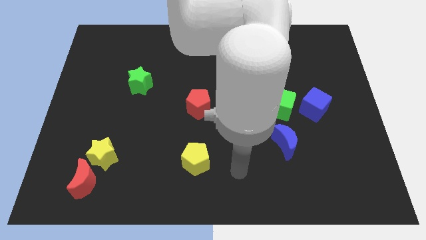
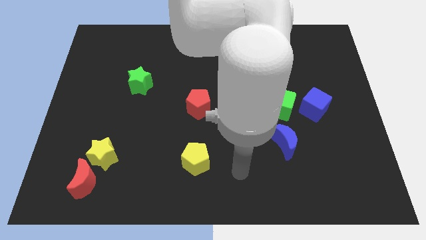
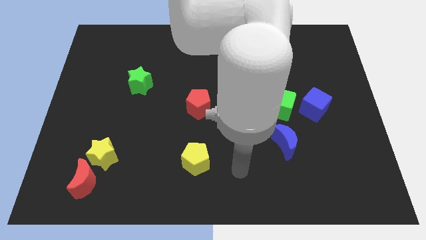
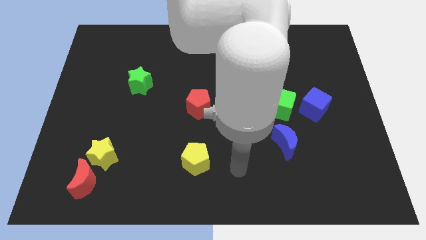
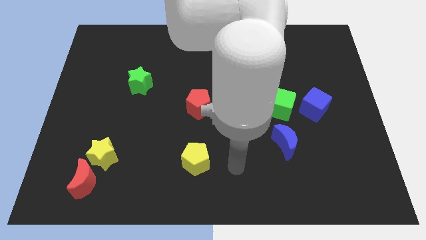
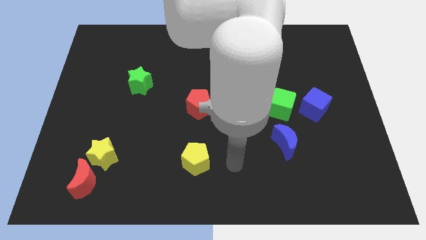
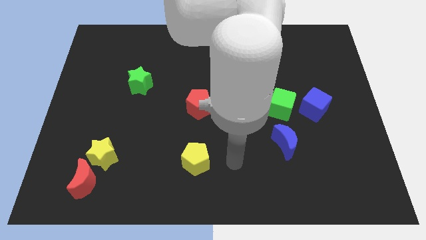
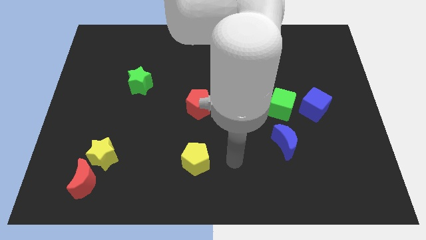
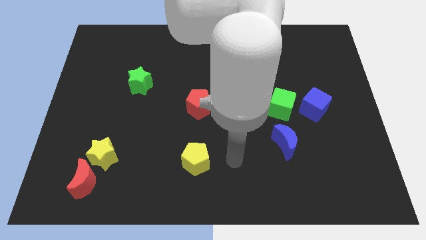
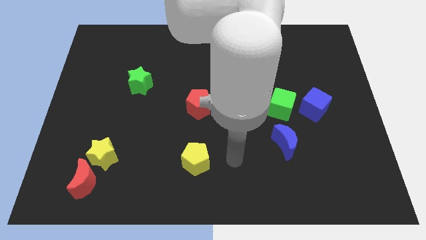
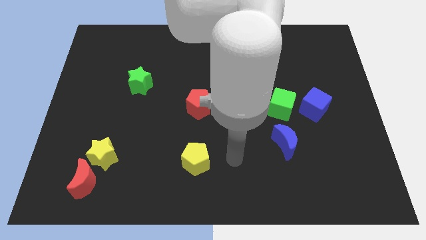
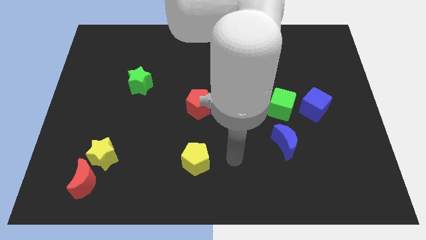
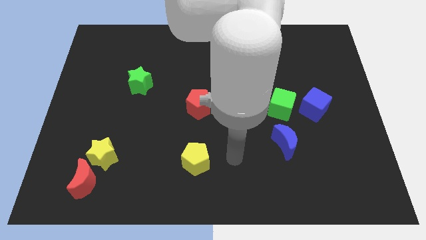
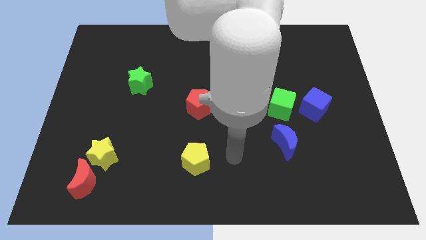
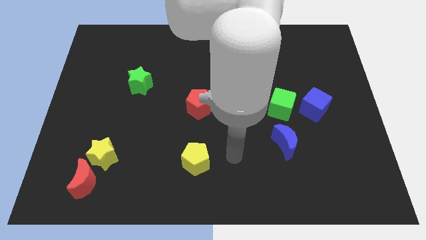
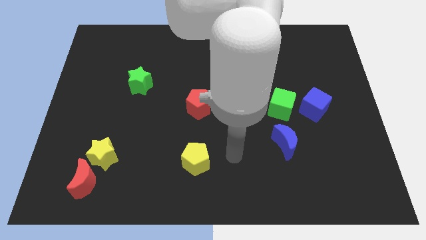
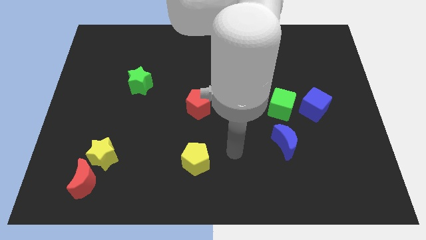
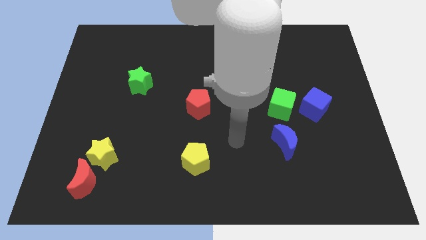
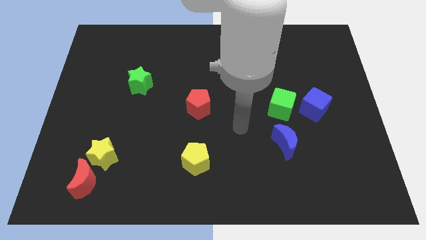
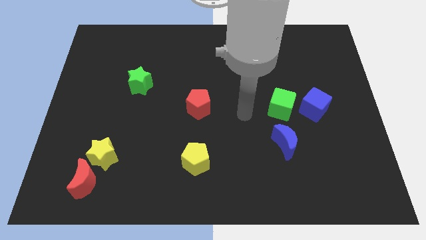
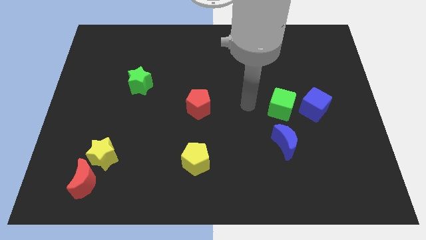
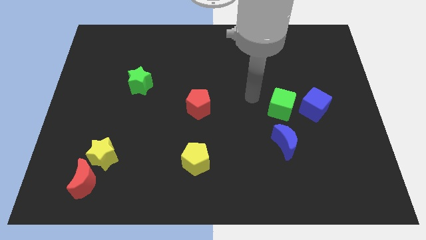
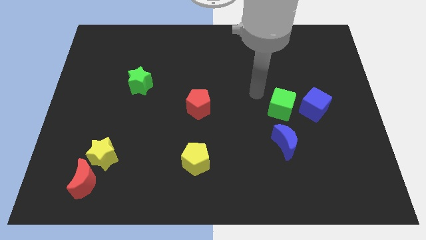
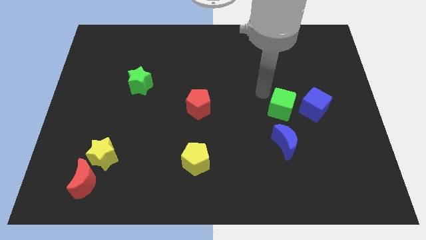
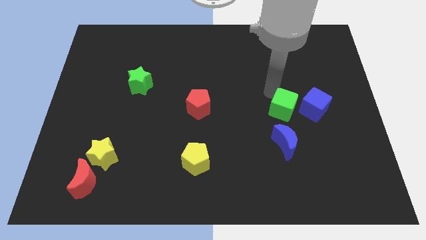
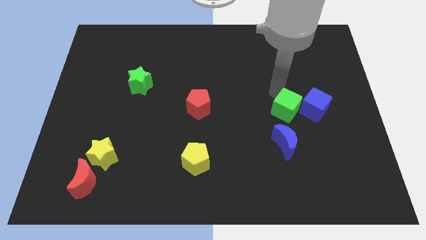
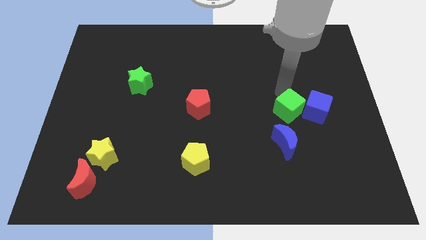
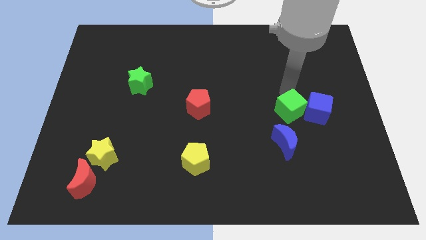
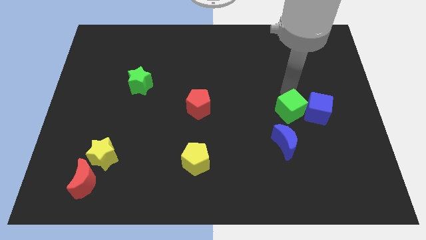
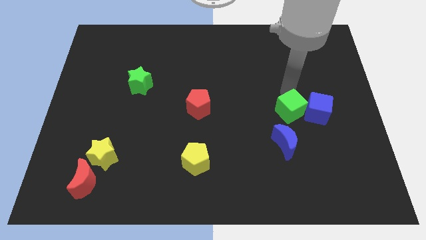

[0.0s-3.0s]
push the green cube into the blue cube

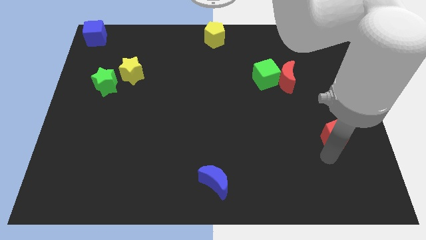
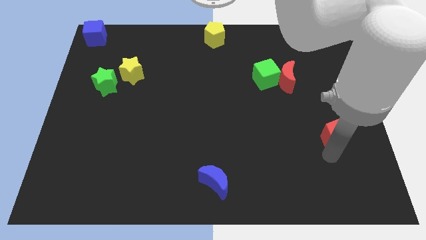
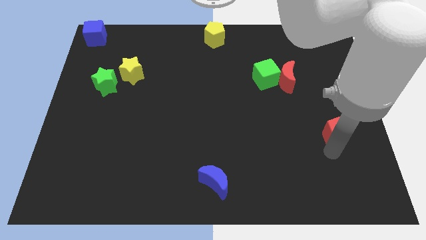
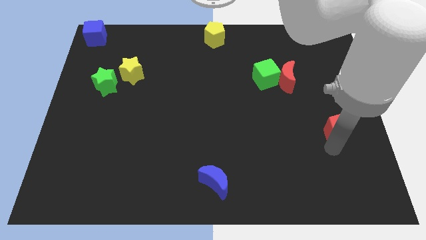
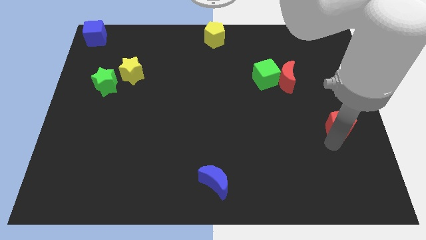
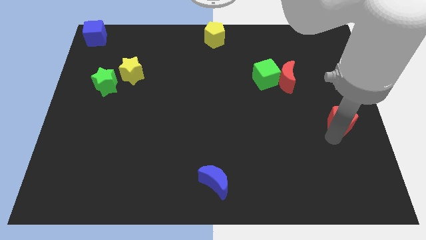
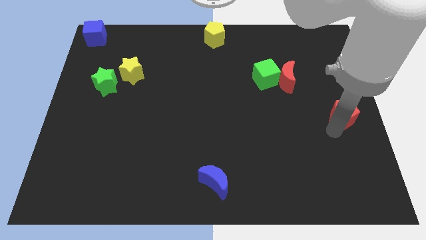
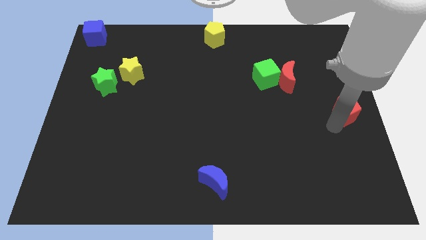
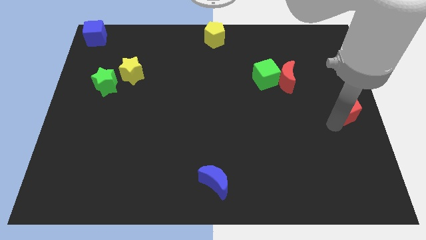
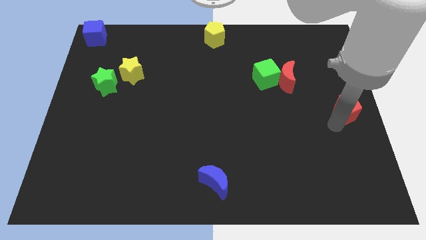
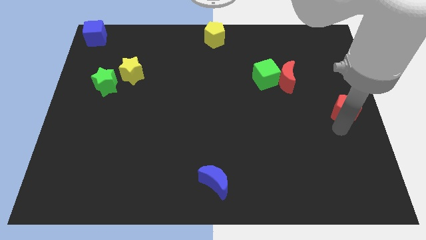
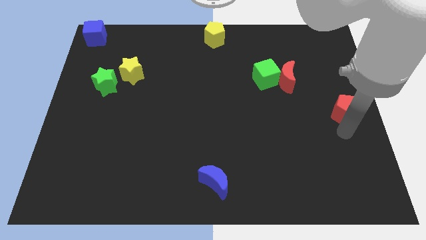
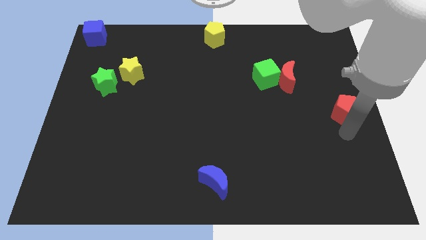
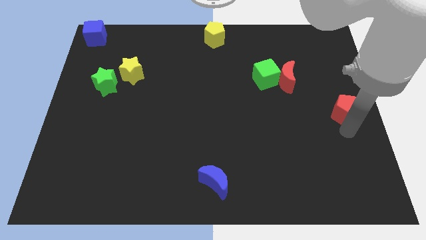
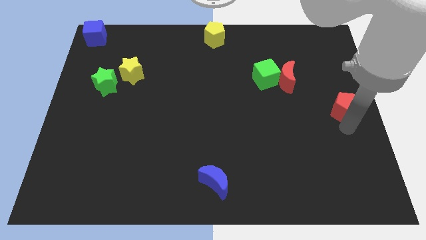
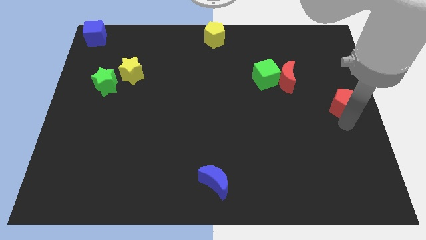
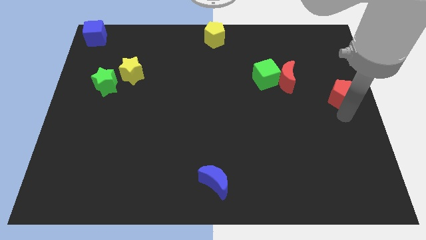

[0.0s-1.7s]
push the red pentagon to the right center of the board

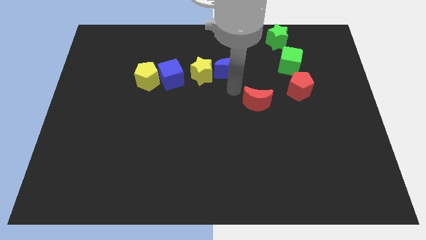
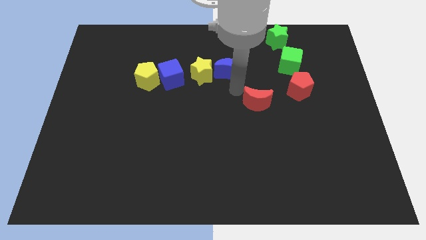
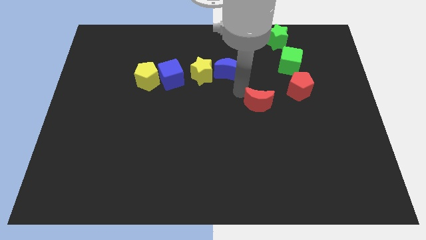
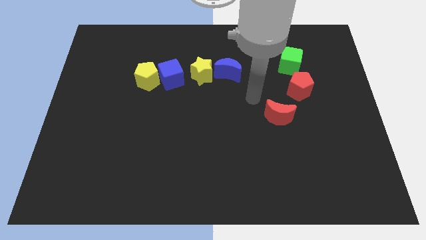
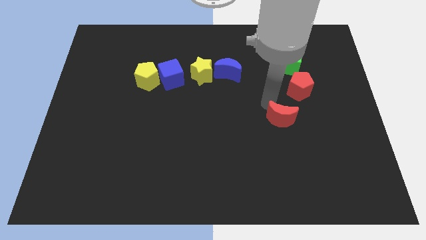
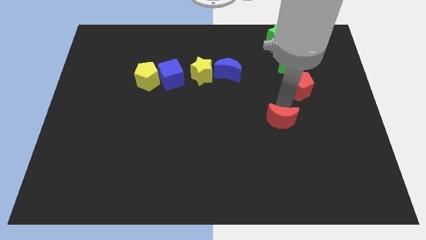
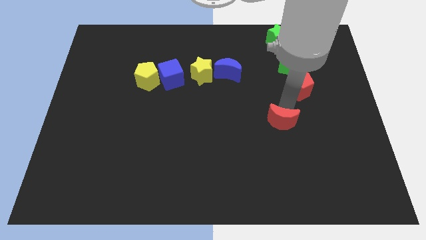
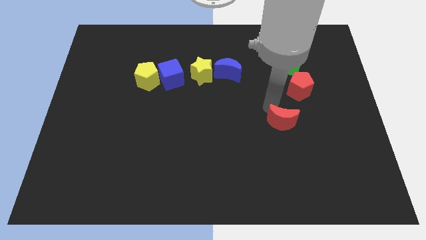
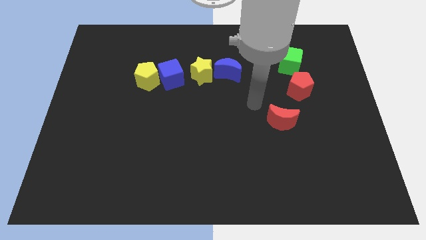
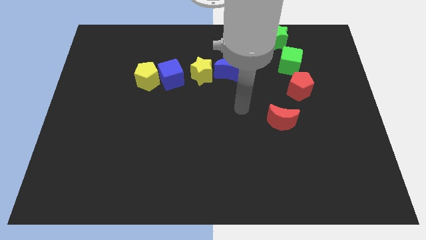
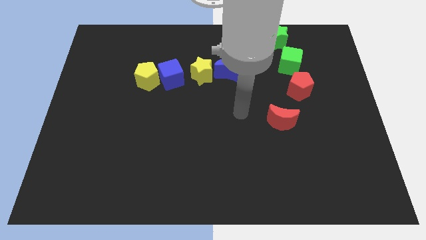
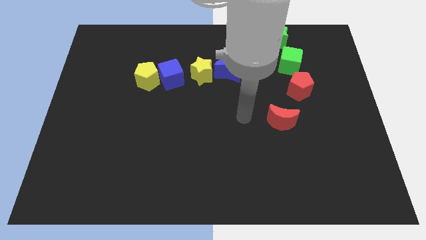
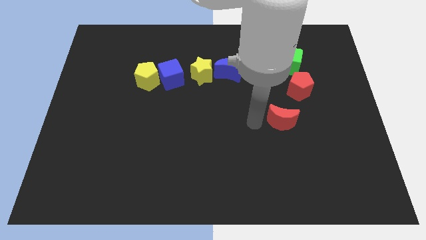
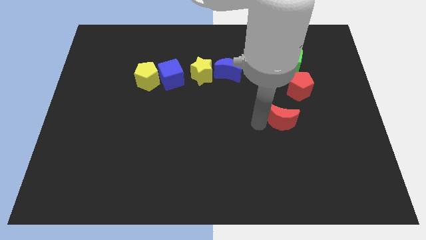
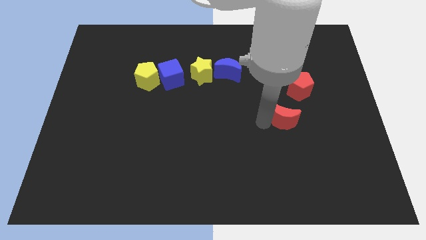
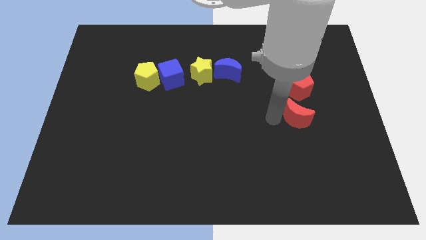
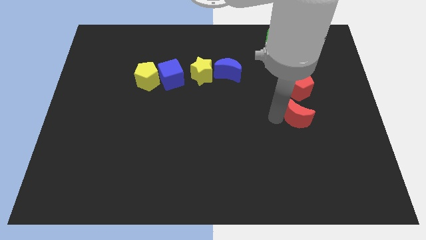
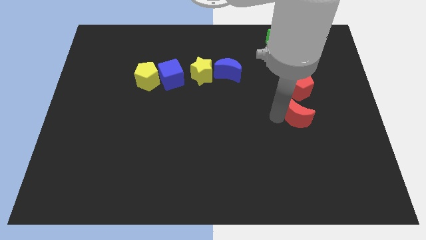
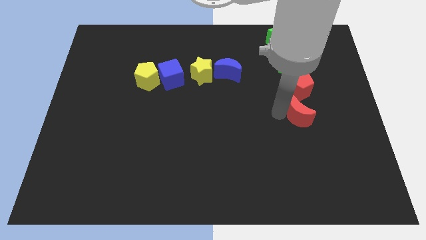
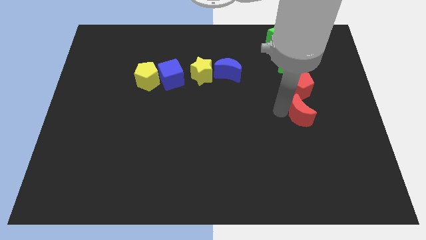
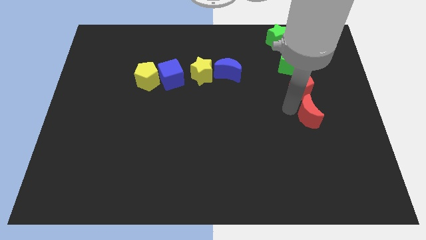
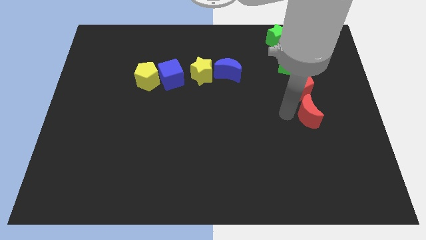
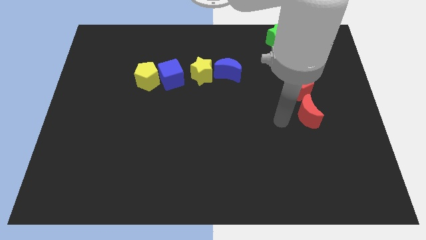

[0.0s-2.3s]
place the red moon below to the red pentagon

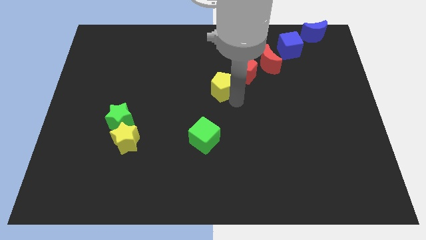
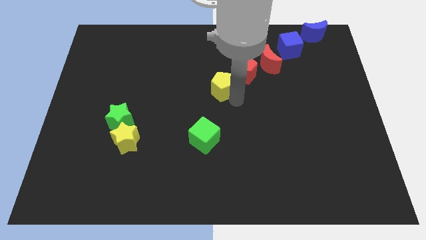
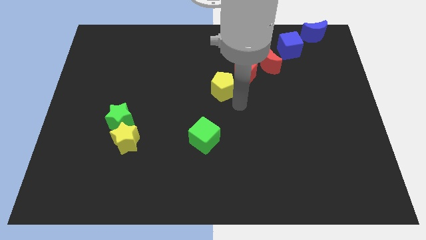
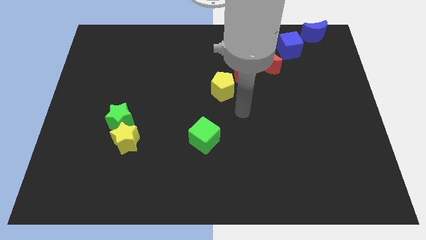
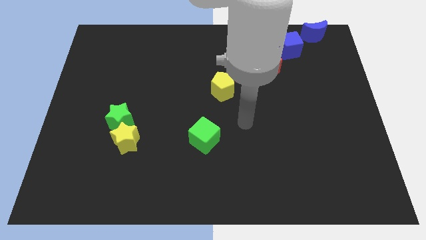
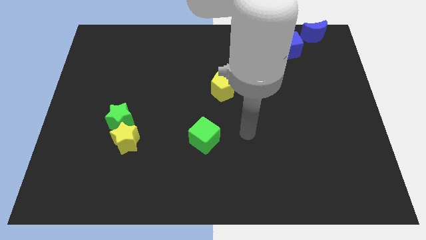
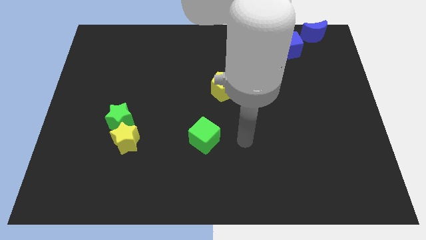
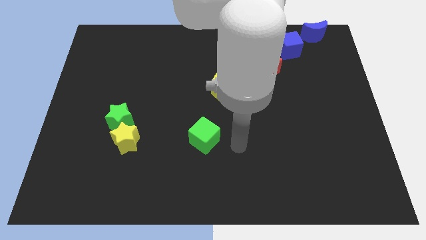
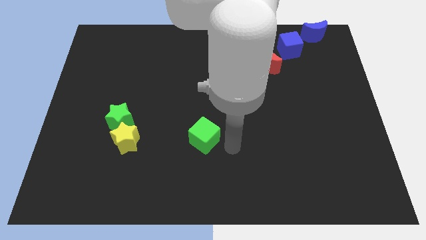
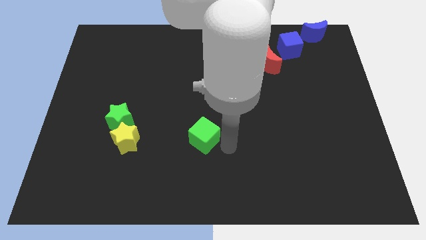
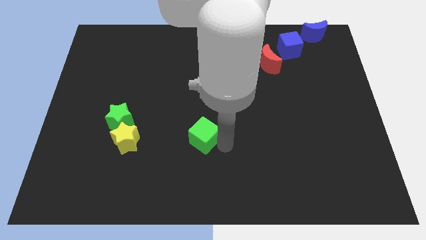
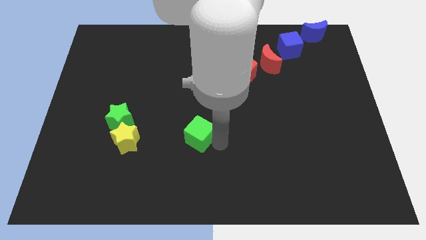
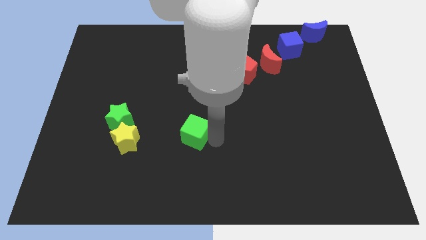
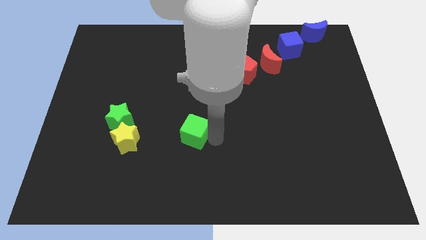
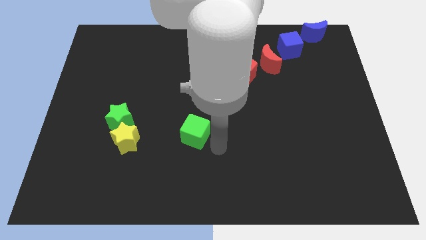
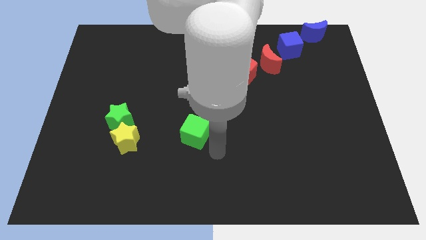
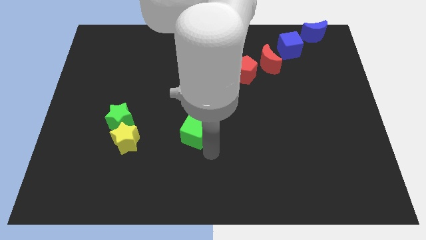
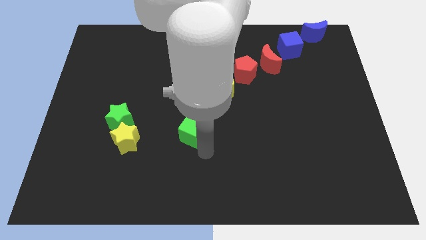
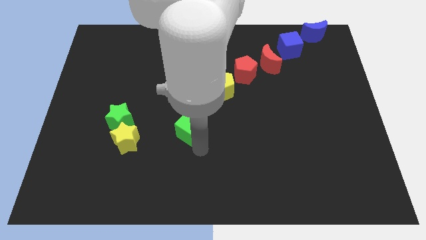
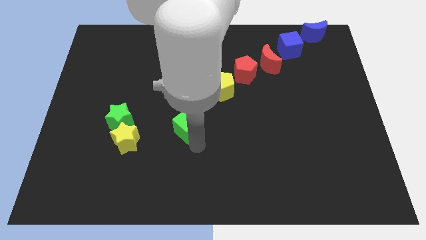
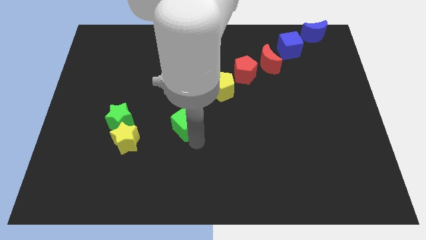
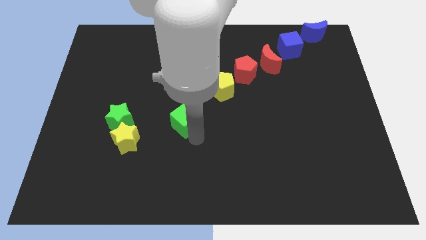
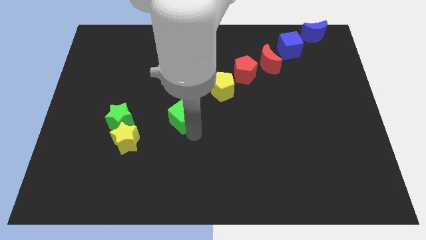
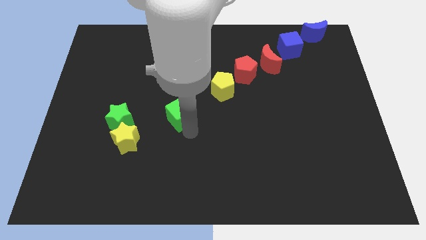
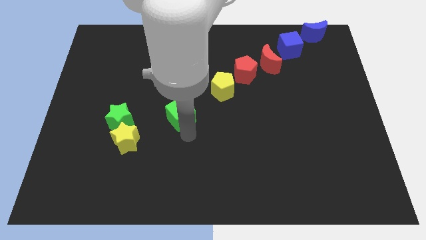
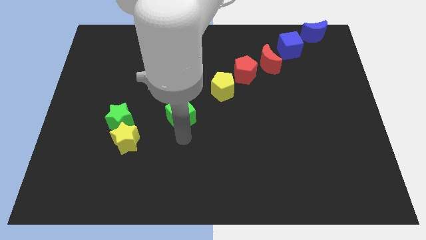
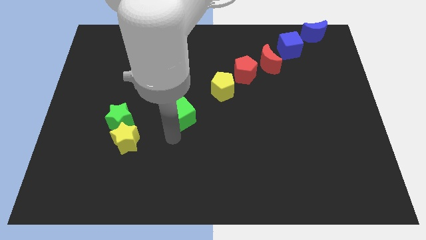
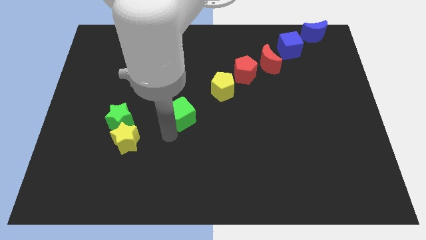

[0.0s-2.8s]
move the green cube in between yellow pentagon and yellow star
